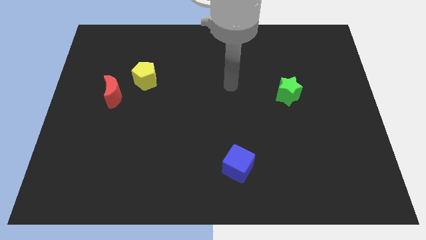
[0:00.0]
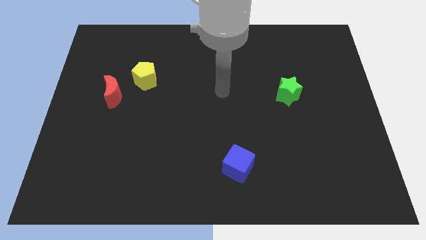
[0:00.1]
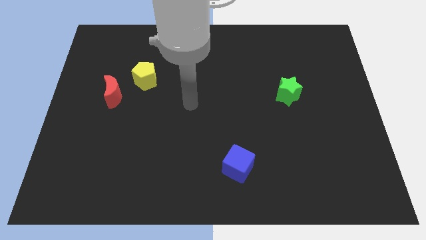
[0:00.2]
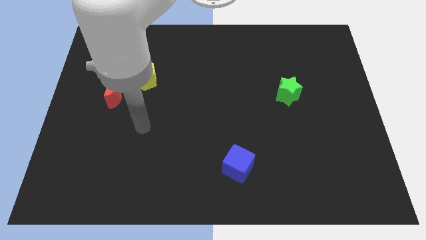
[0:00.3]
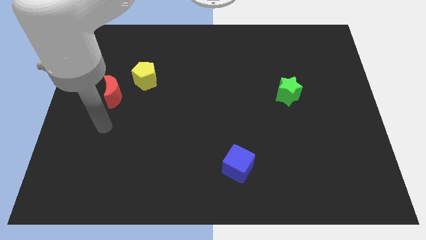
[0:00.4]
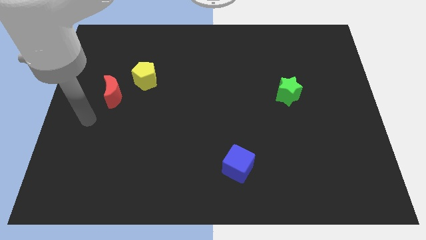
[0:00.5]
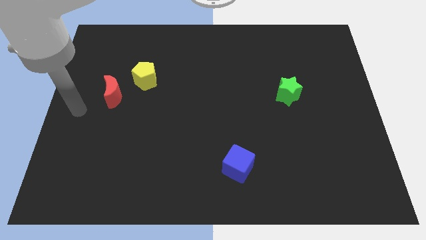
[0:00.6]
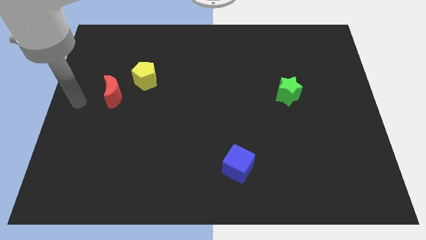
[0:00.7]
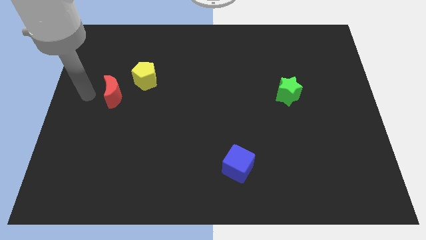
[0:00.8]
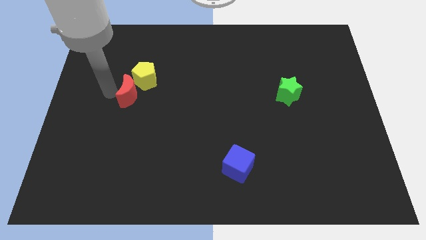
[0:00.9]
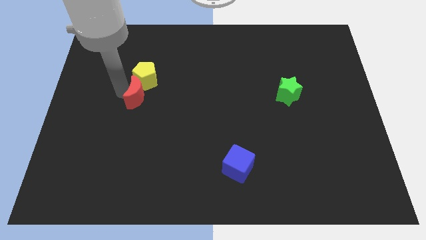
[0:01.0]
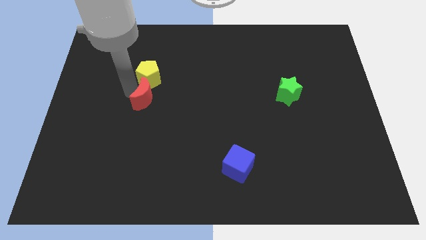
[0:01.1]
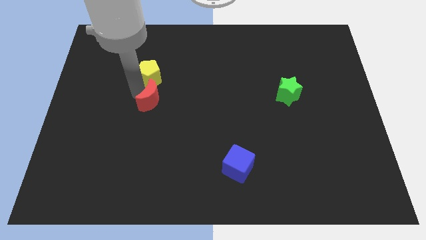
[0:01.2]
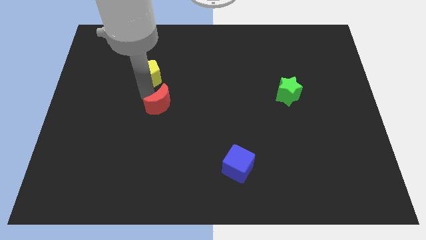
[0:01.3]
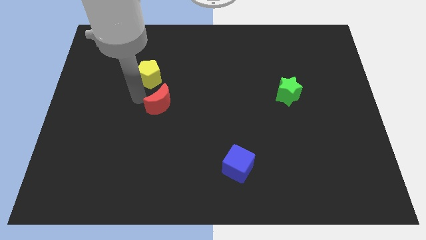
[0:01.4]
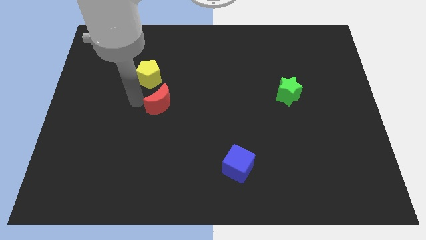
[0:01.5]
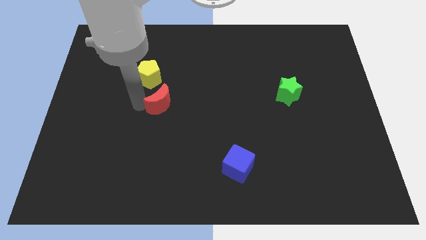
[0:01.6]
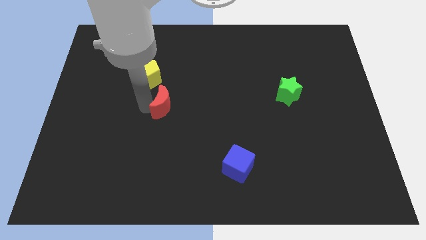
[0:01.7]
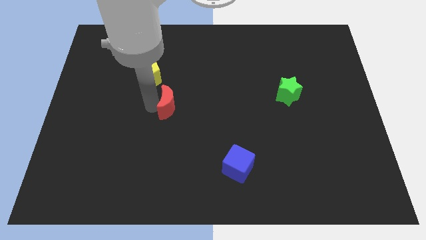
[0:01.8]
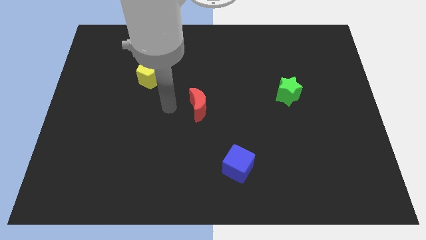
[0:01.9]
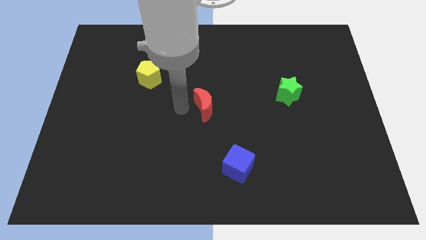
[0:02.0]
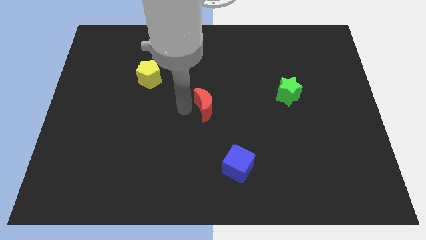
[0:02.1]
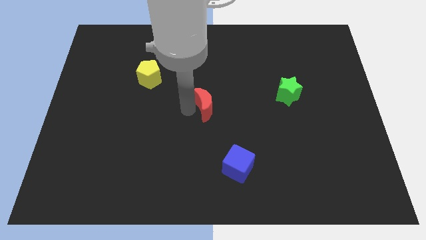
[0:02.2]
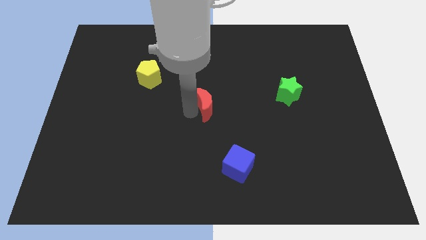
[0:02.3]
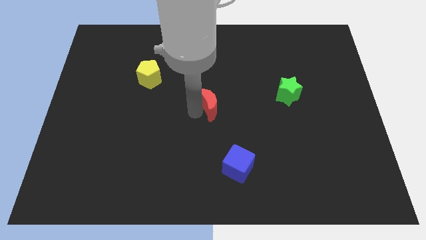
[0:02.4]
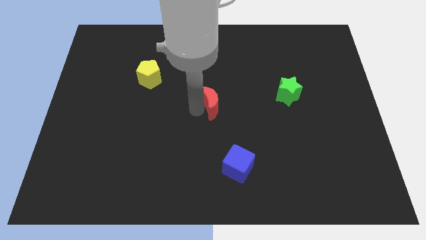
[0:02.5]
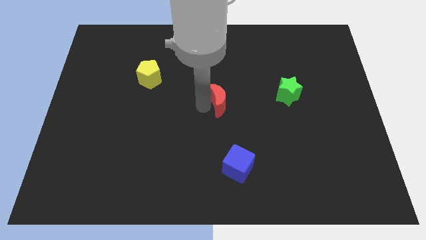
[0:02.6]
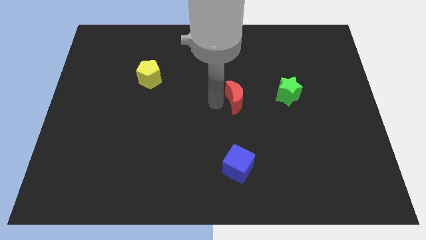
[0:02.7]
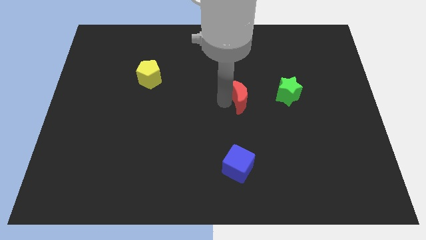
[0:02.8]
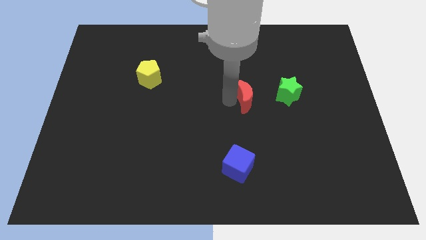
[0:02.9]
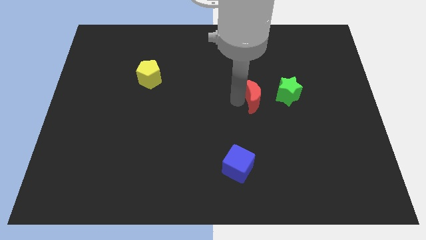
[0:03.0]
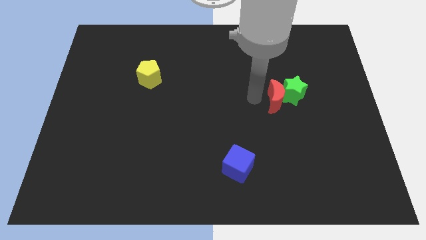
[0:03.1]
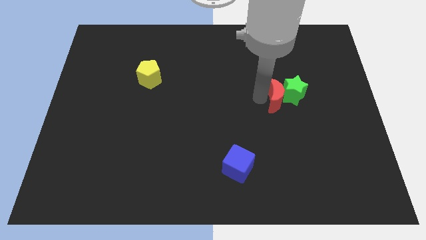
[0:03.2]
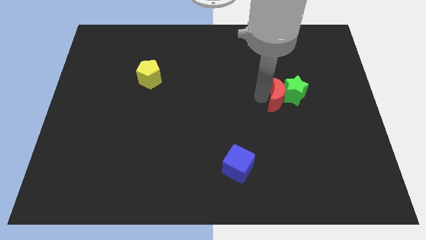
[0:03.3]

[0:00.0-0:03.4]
put the moon towards the star

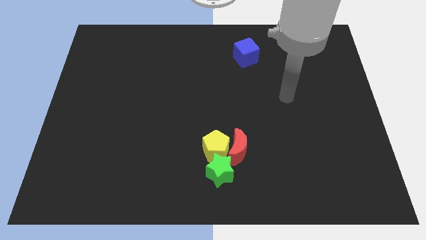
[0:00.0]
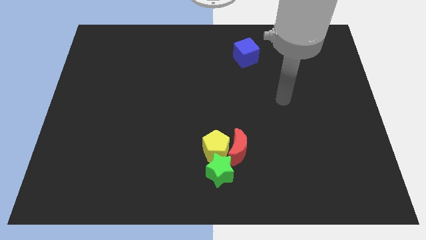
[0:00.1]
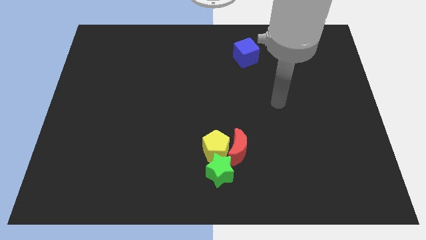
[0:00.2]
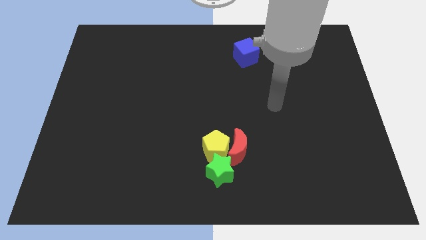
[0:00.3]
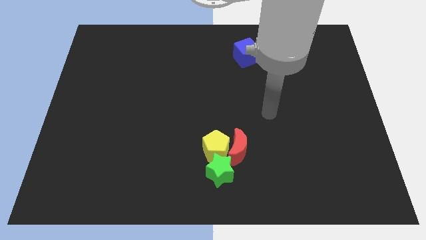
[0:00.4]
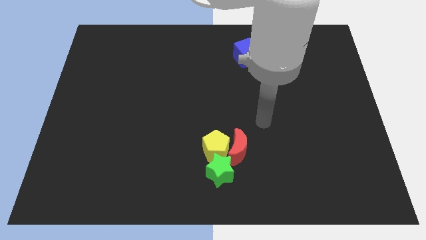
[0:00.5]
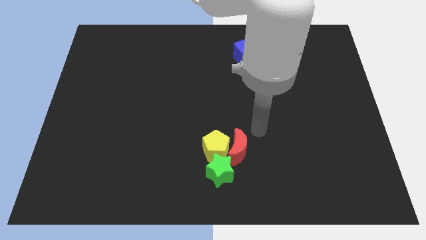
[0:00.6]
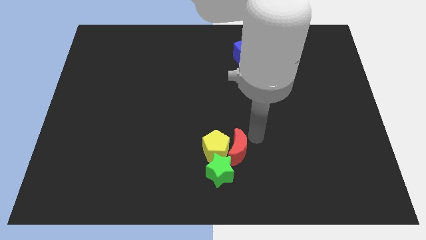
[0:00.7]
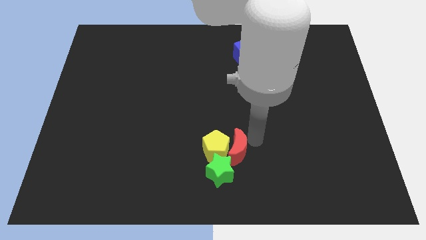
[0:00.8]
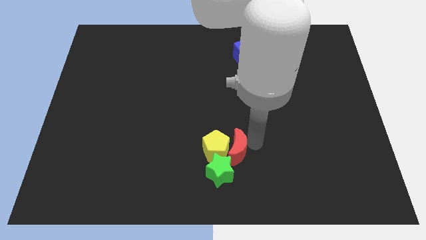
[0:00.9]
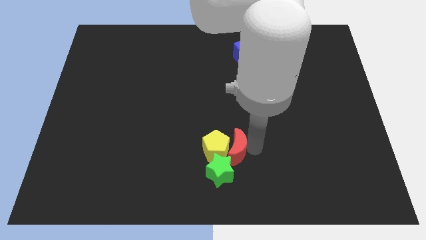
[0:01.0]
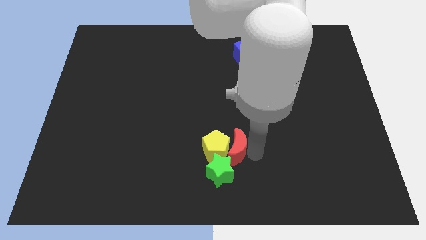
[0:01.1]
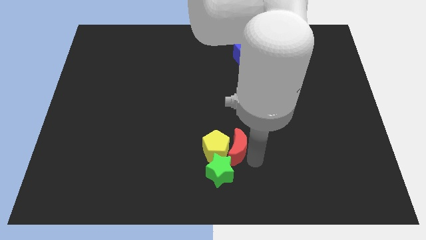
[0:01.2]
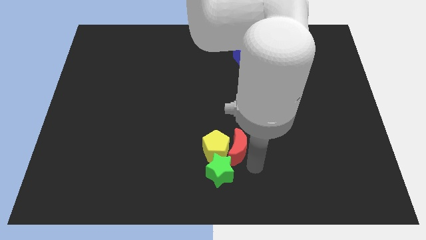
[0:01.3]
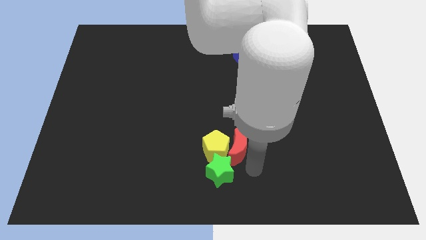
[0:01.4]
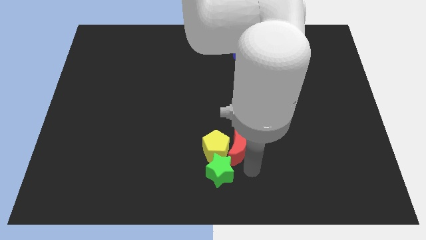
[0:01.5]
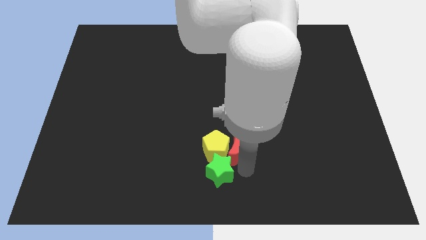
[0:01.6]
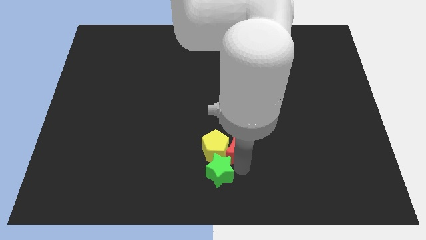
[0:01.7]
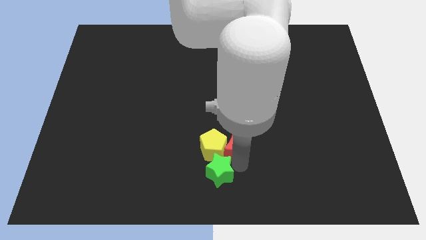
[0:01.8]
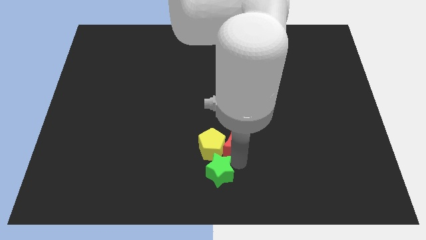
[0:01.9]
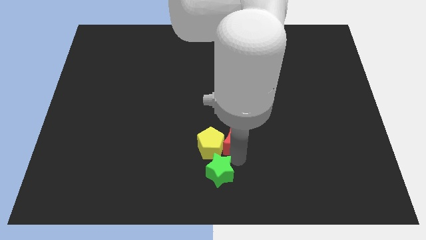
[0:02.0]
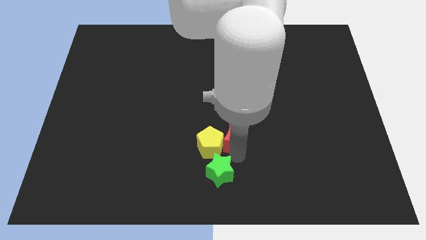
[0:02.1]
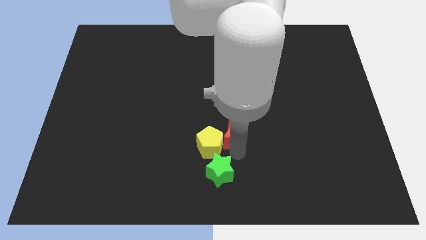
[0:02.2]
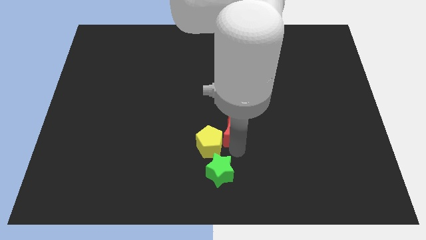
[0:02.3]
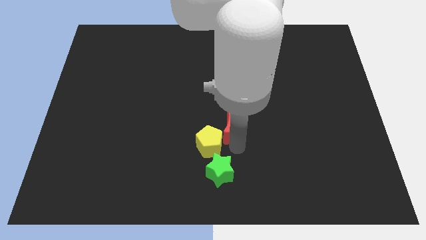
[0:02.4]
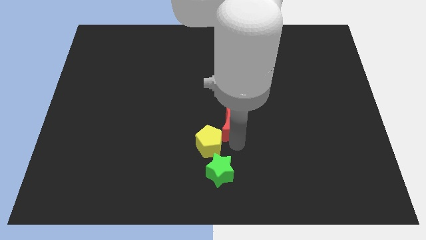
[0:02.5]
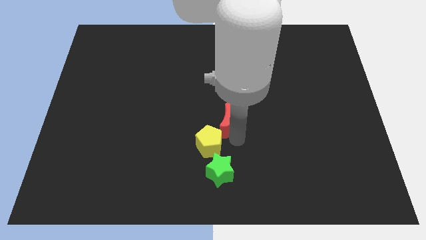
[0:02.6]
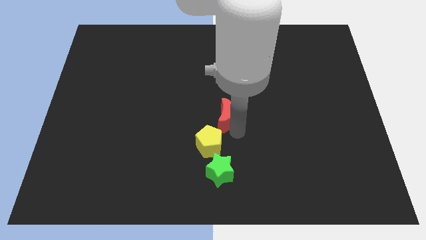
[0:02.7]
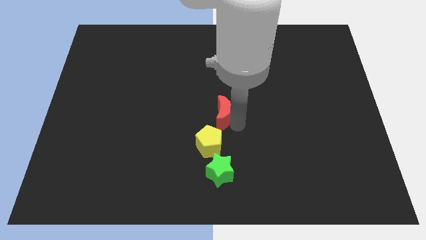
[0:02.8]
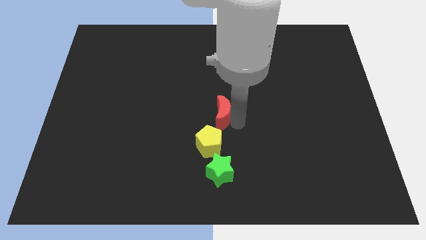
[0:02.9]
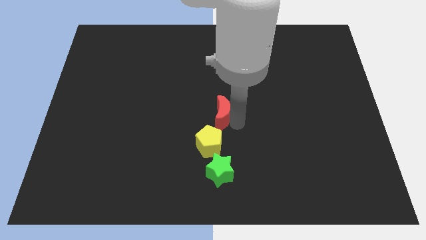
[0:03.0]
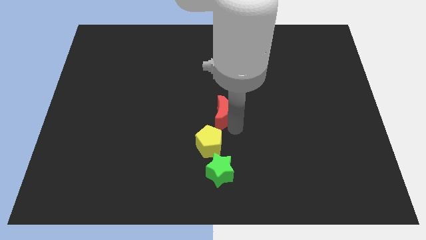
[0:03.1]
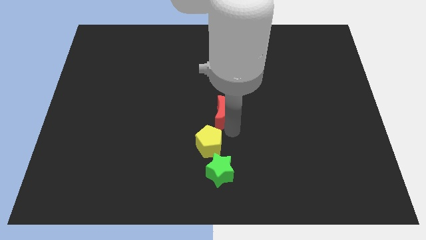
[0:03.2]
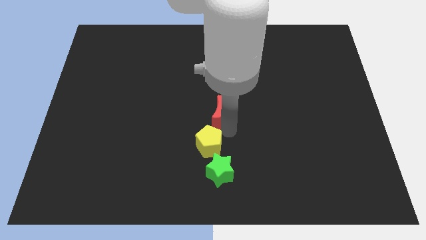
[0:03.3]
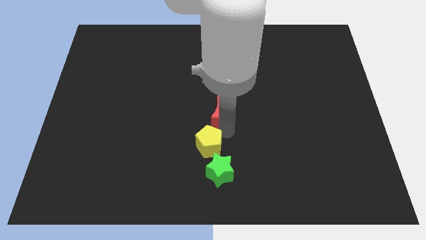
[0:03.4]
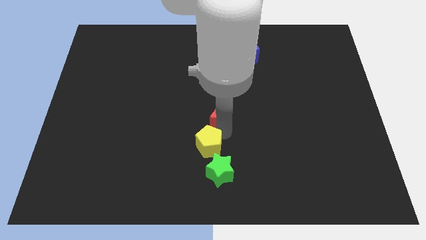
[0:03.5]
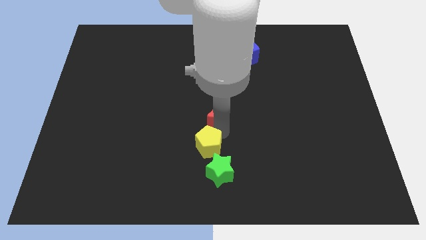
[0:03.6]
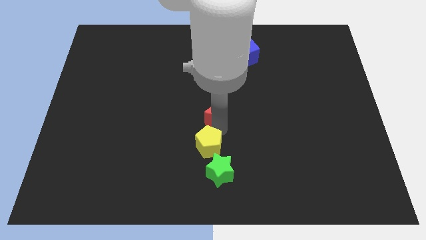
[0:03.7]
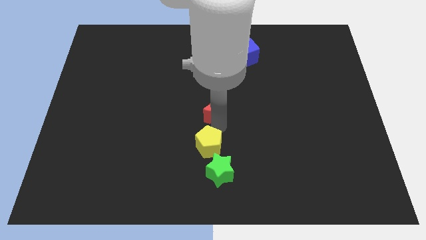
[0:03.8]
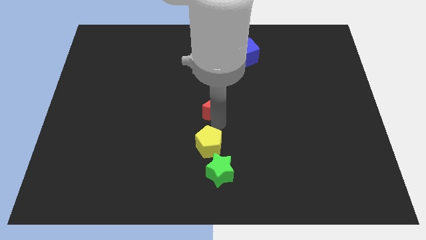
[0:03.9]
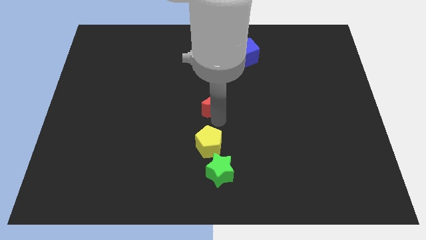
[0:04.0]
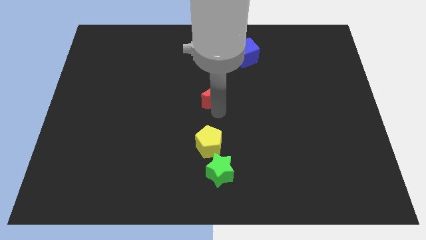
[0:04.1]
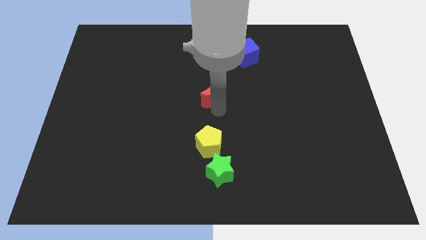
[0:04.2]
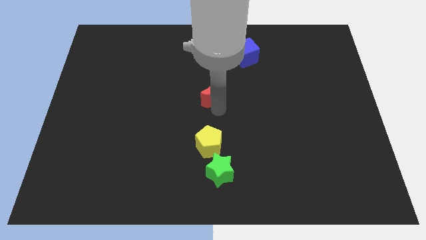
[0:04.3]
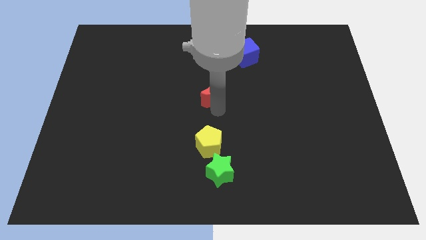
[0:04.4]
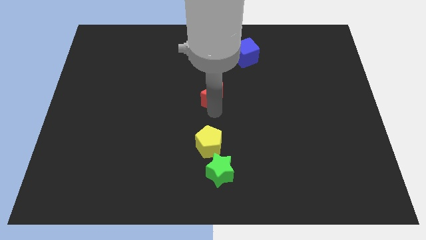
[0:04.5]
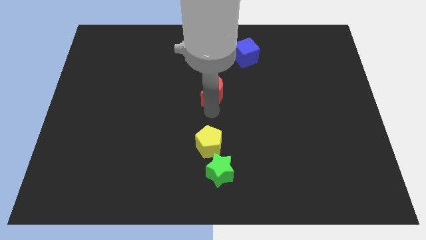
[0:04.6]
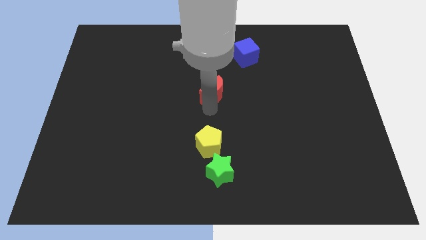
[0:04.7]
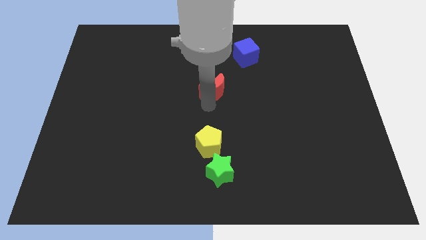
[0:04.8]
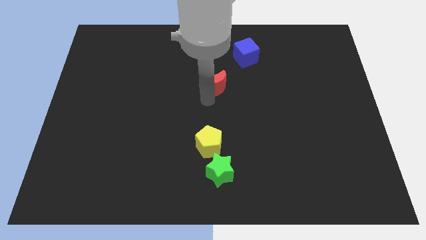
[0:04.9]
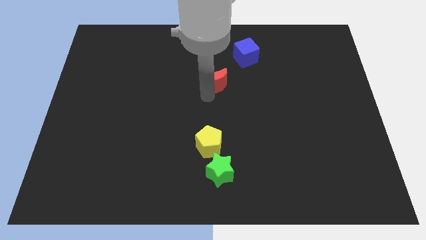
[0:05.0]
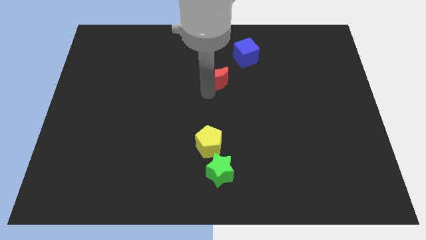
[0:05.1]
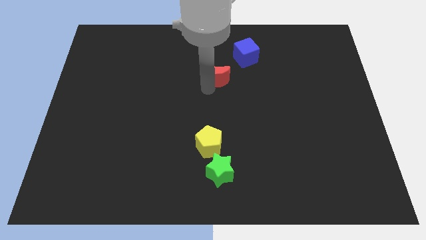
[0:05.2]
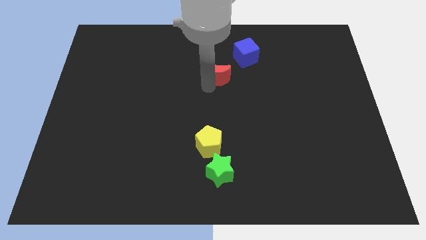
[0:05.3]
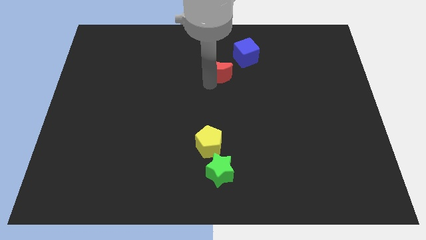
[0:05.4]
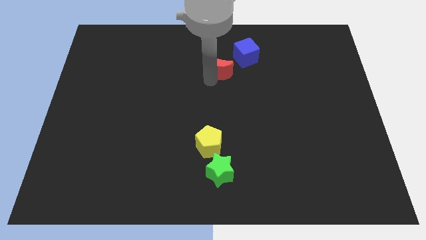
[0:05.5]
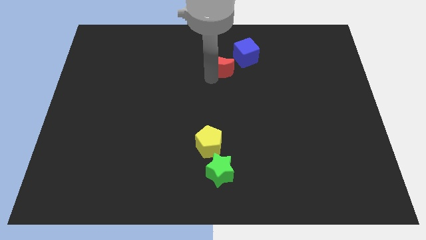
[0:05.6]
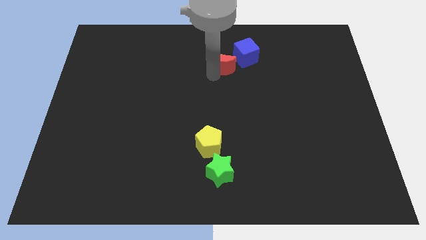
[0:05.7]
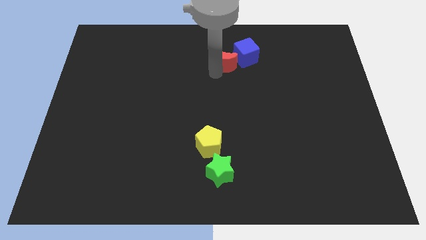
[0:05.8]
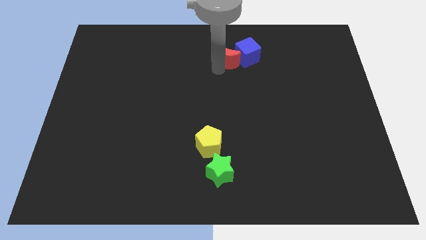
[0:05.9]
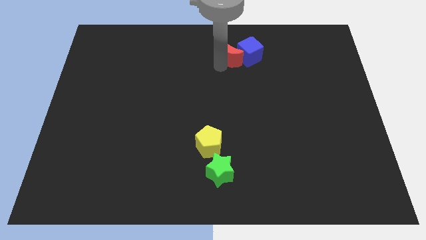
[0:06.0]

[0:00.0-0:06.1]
move the moon close to the cube
